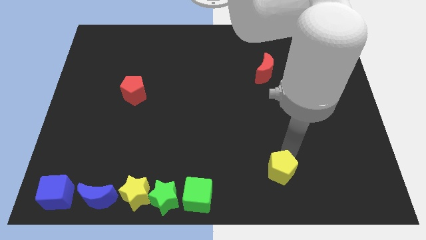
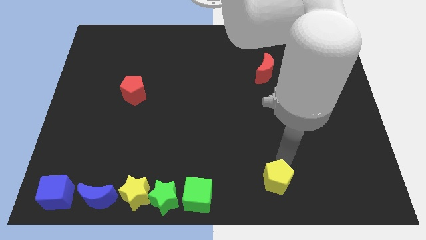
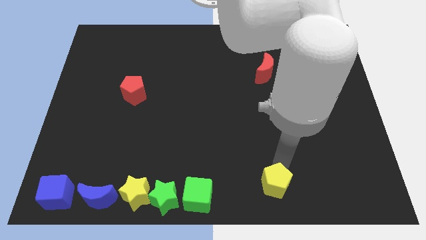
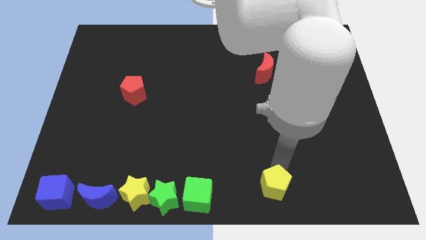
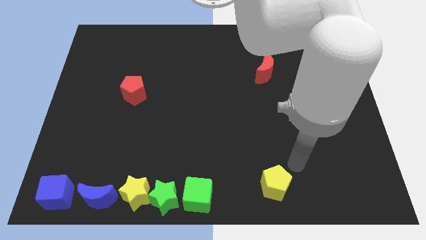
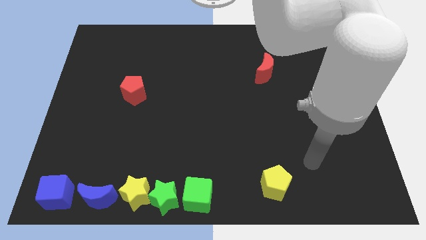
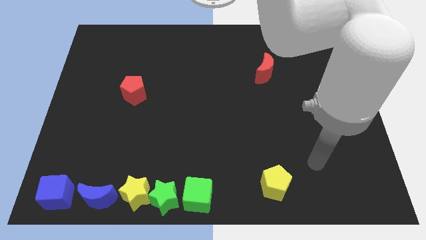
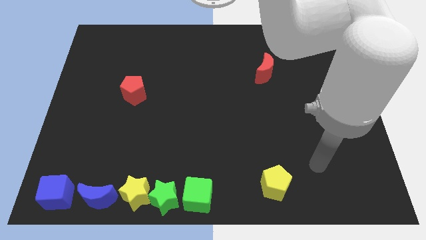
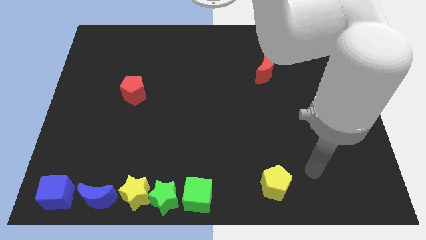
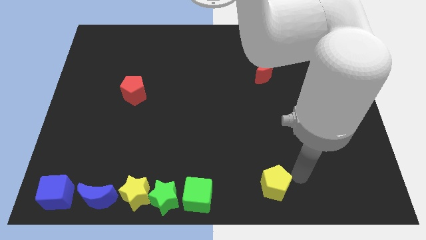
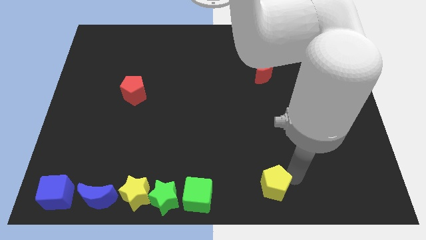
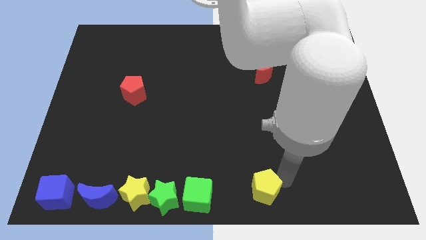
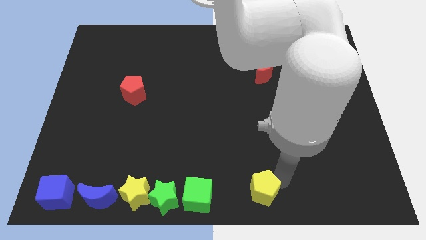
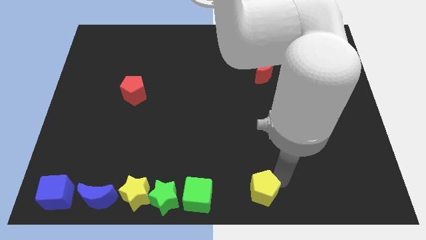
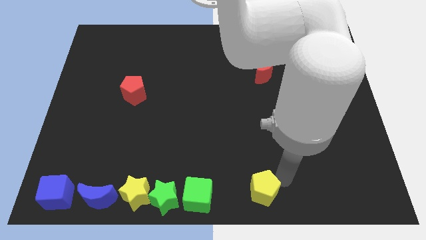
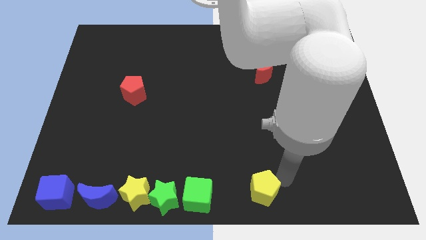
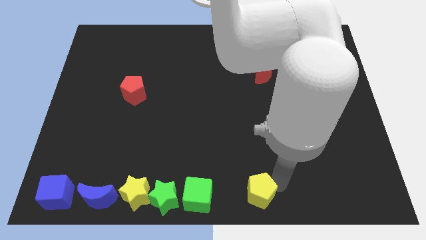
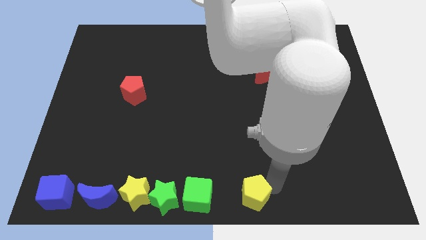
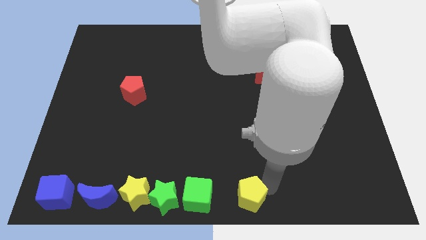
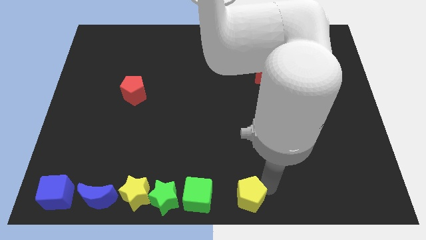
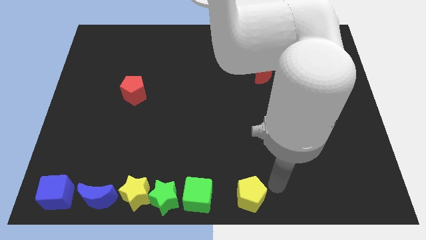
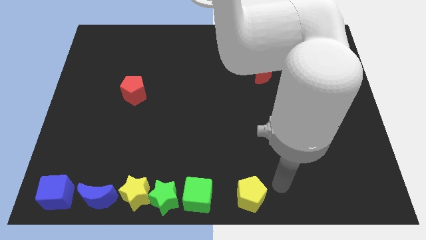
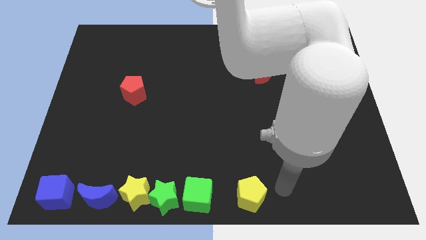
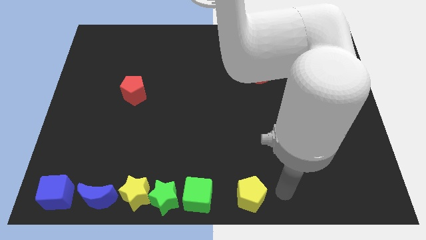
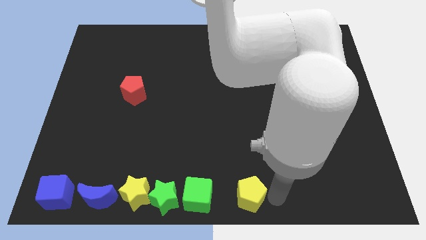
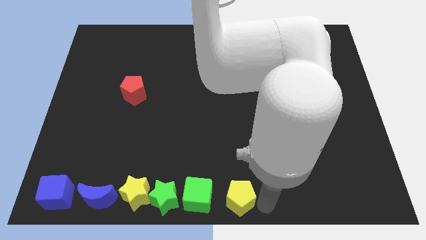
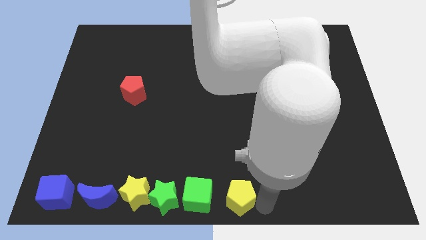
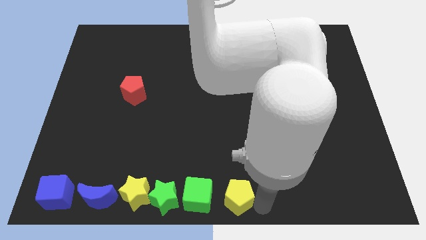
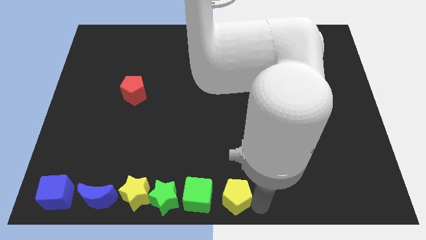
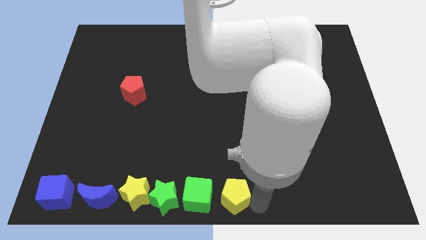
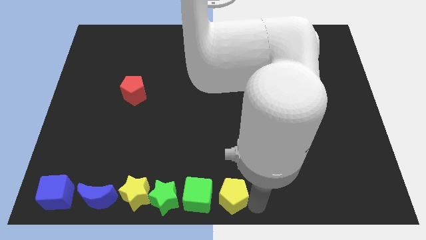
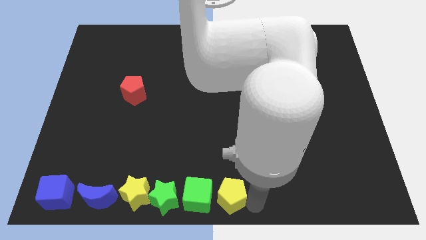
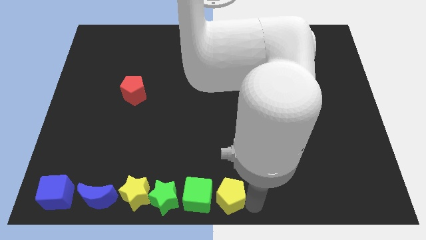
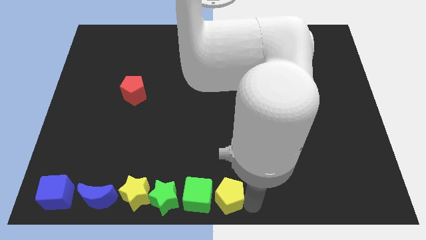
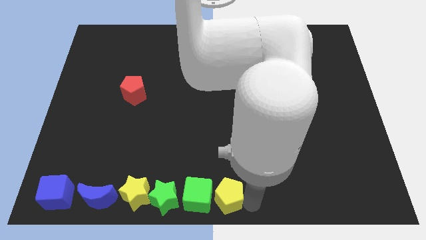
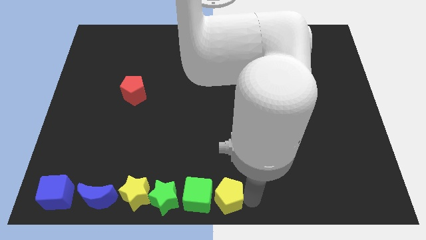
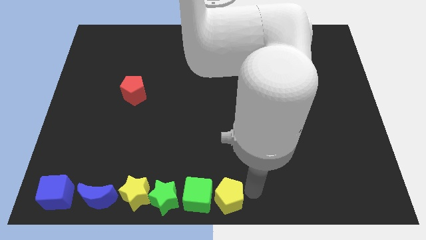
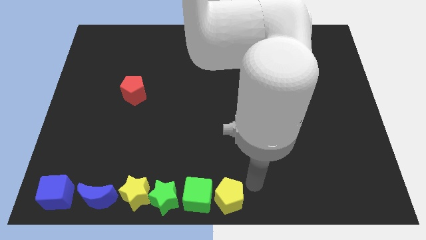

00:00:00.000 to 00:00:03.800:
place the yellow pentagon to the right of the green cube

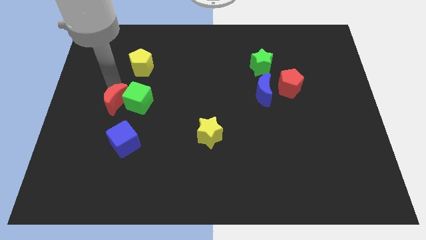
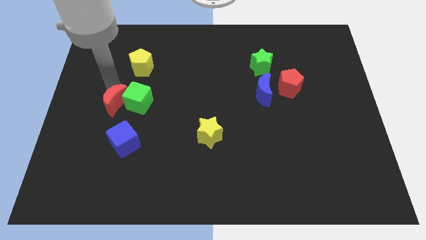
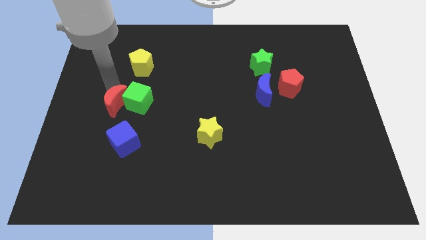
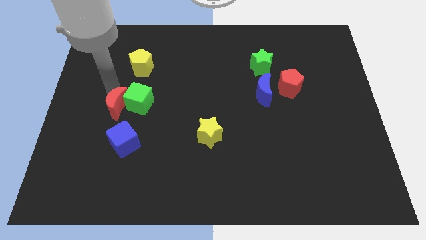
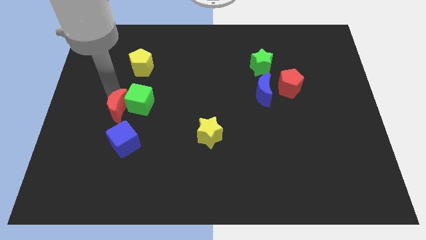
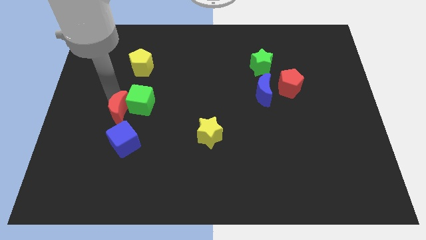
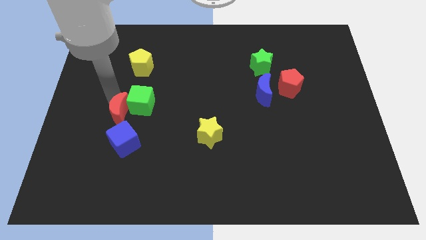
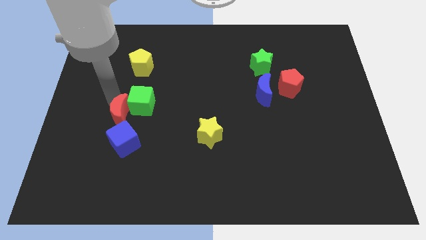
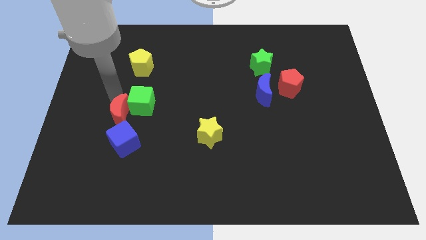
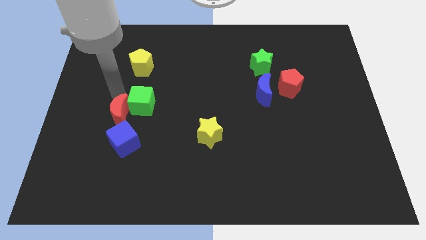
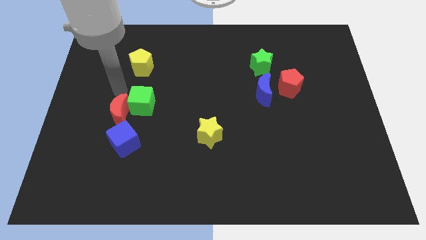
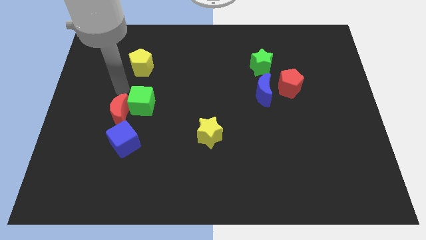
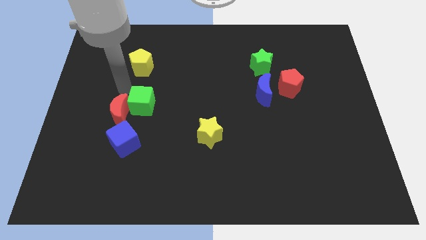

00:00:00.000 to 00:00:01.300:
push red moon close to the blue cube

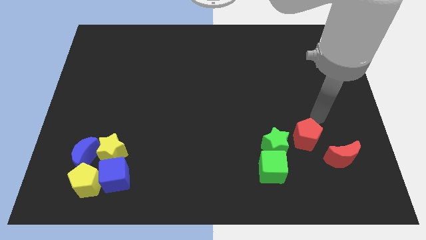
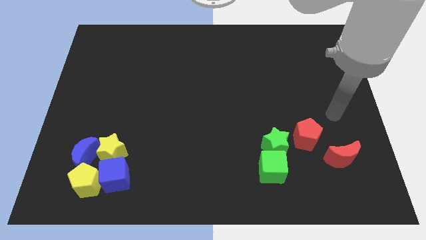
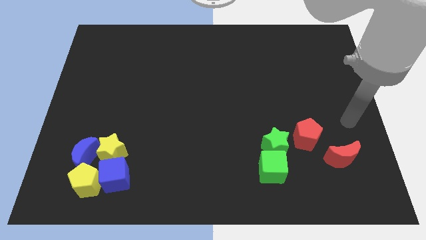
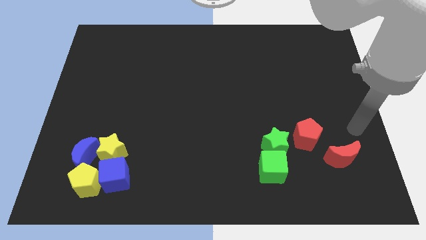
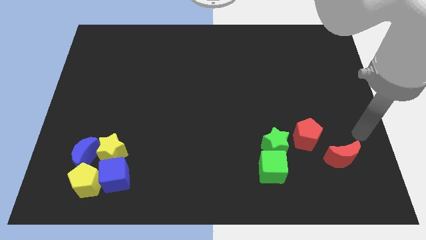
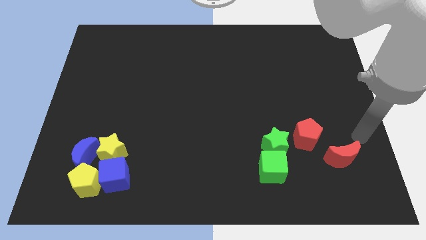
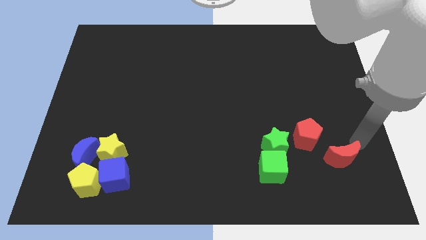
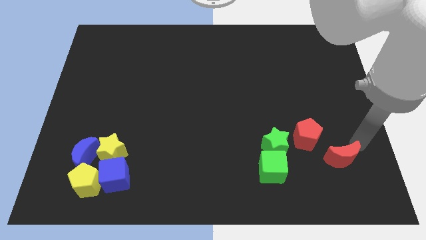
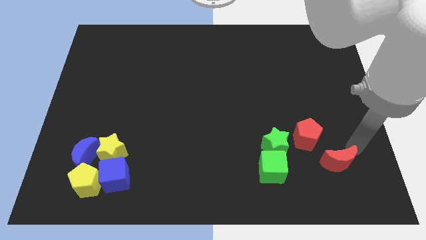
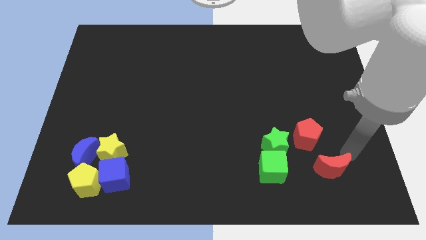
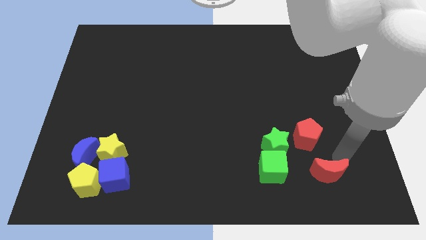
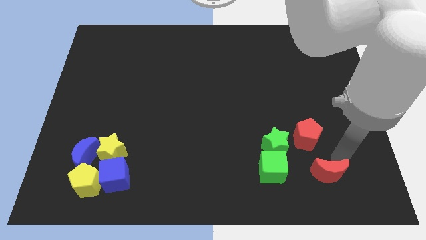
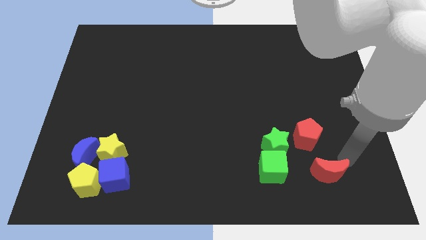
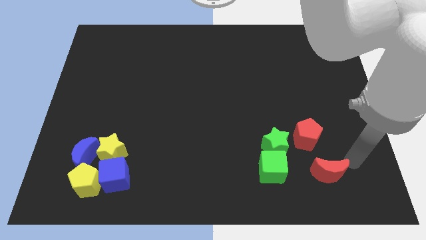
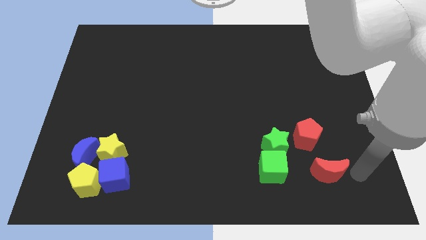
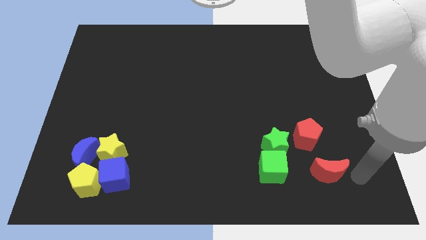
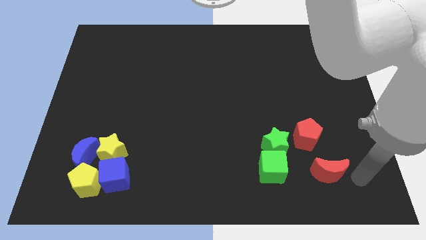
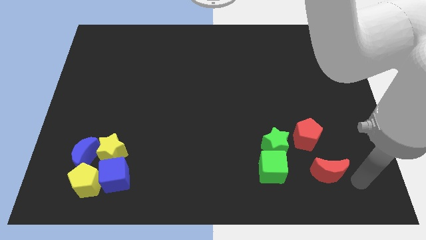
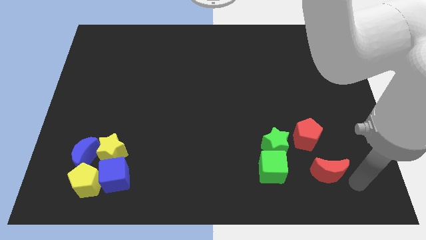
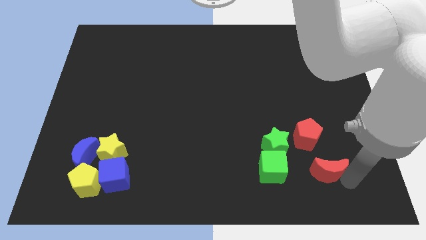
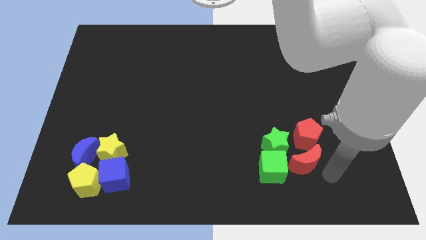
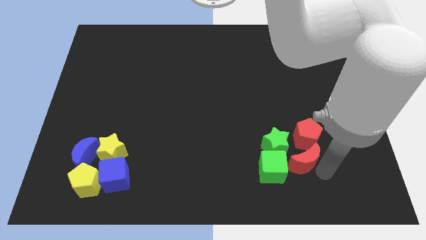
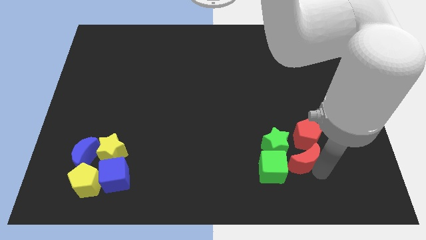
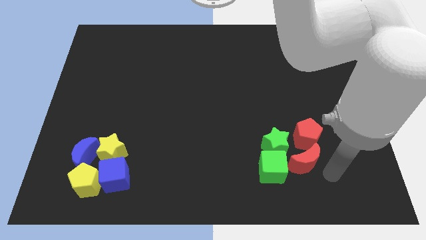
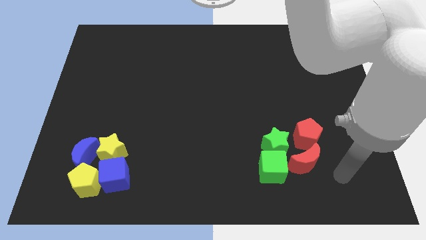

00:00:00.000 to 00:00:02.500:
push the red crescent to the right of the green cube

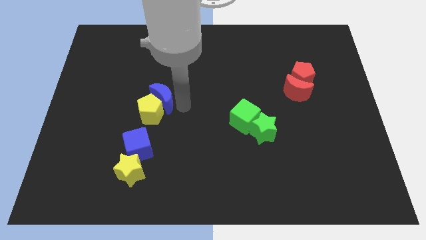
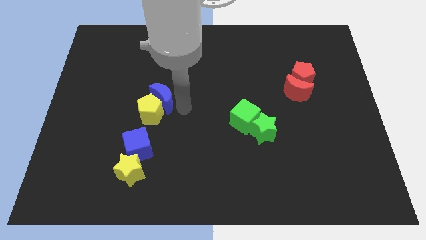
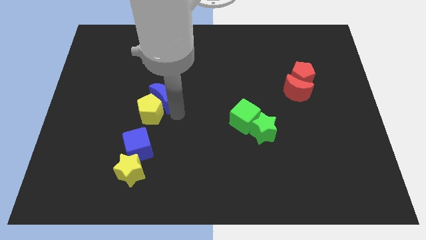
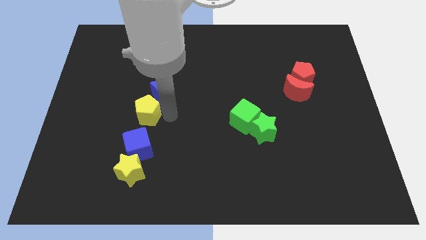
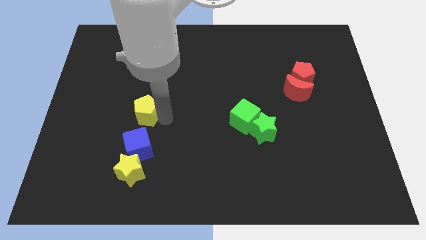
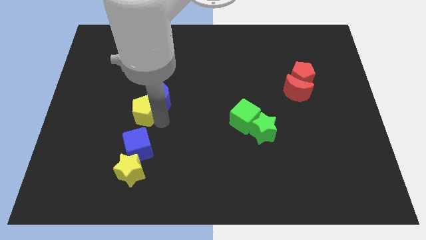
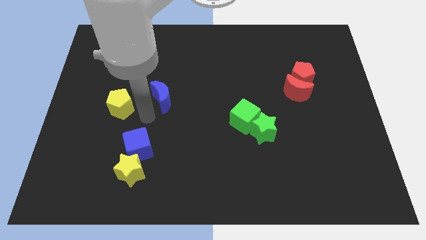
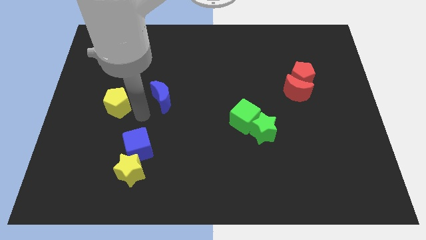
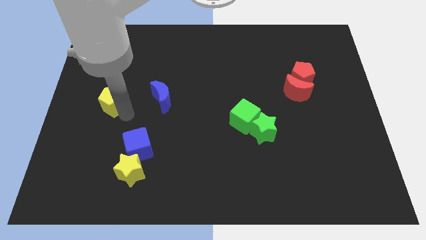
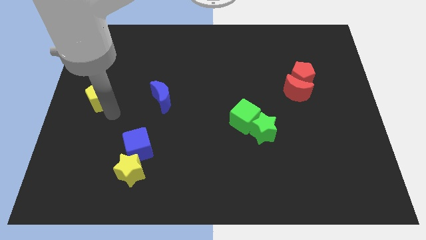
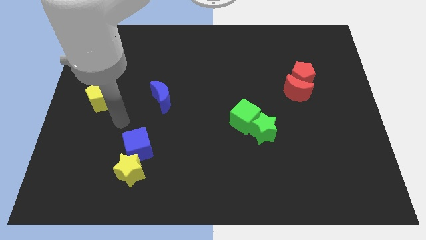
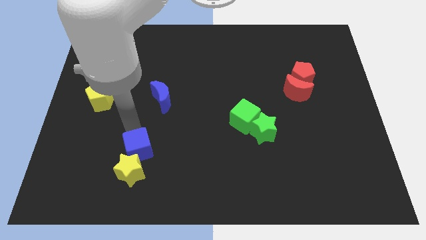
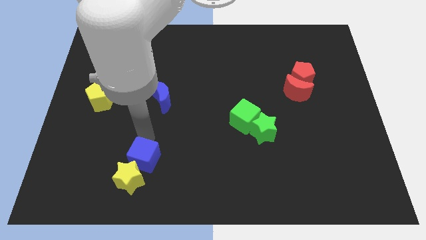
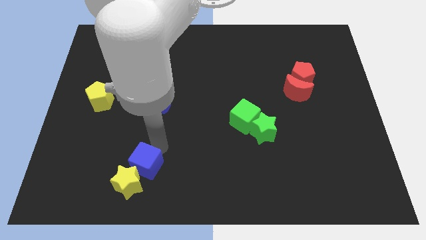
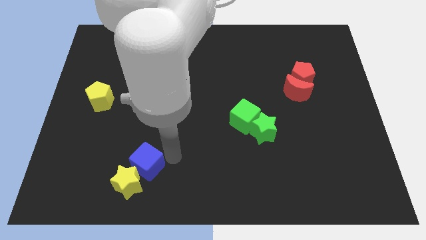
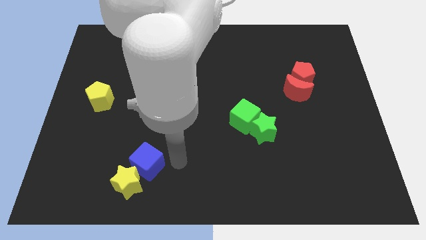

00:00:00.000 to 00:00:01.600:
separate the yellow pentagon and blue crescent
